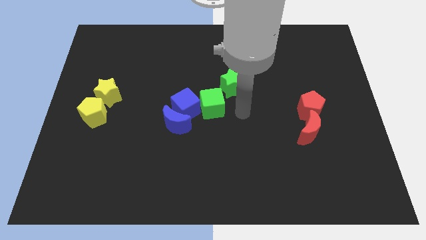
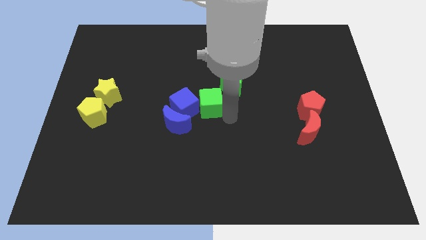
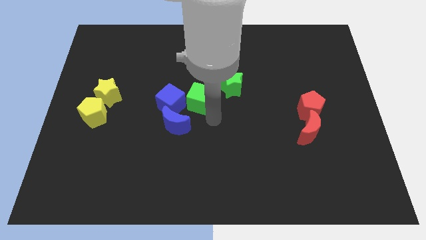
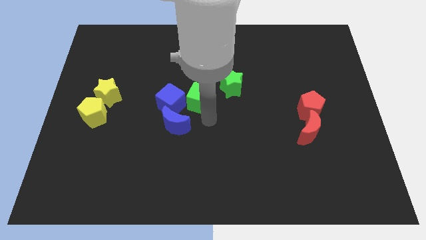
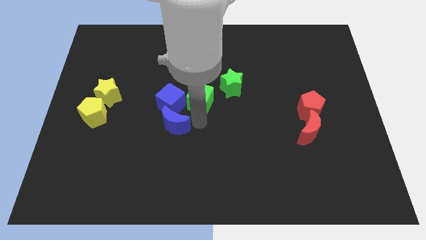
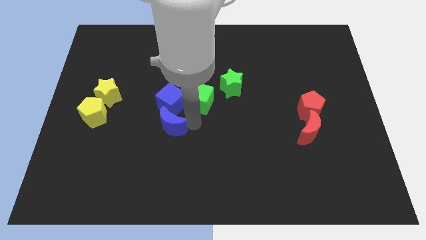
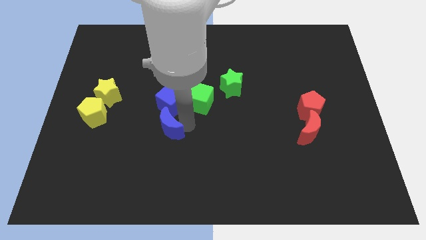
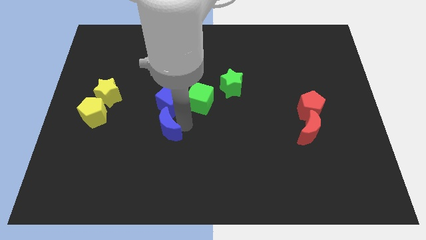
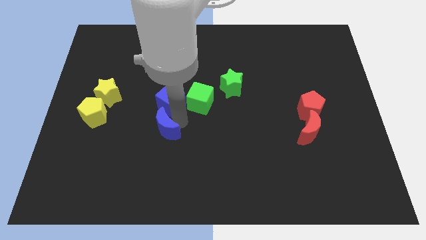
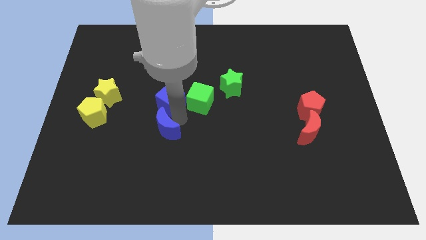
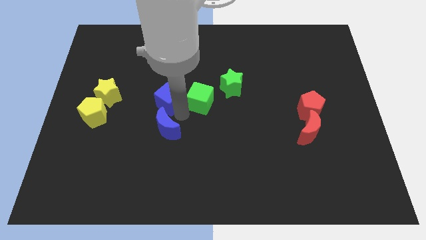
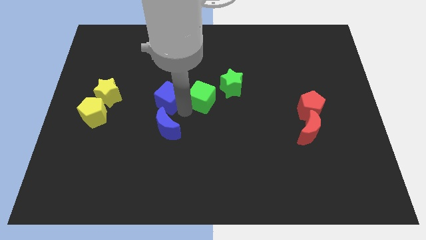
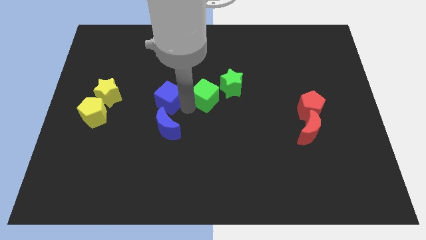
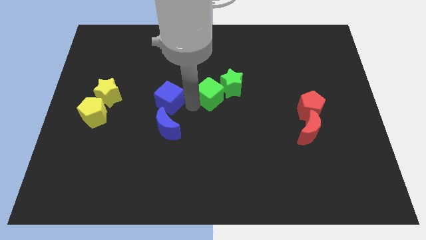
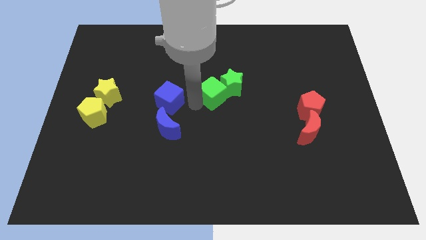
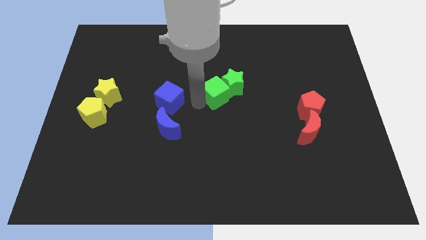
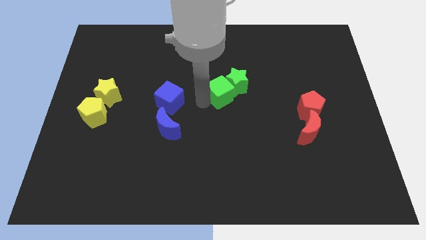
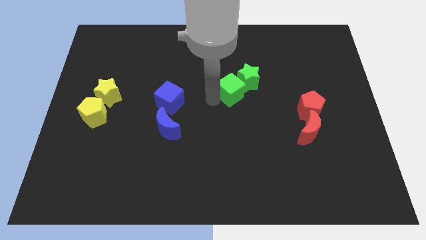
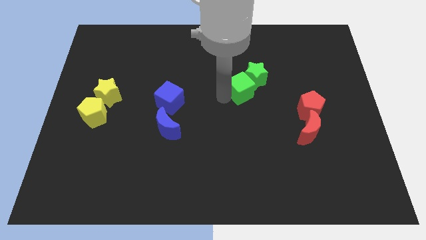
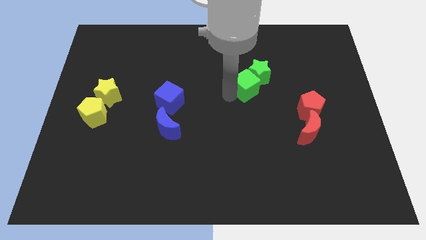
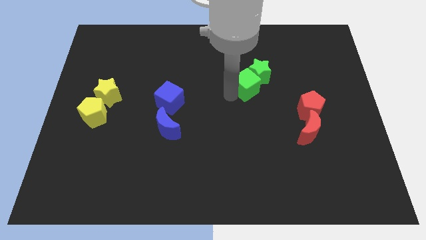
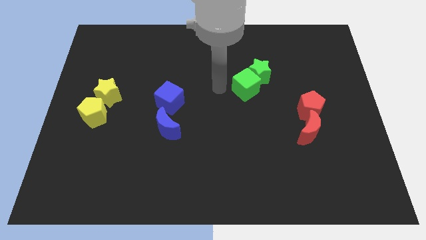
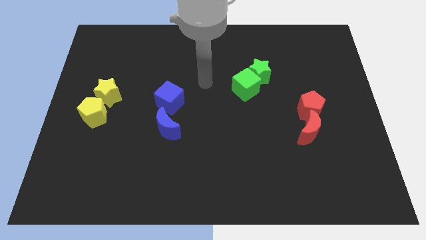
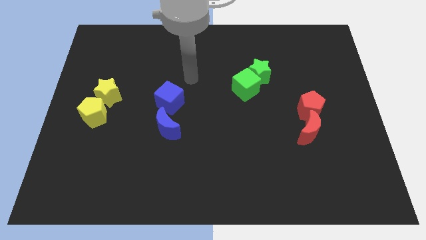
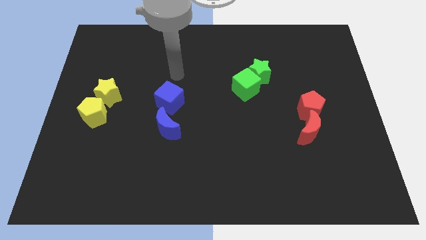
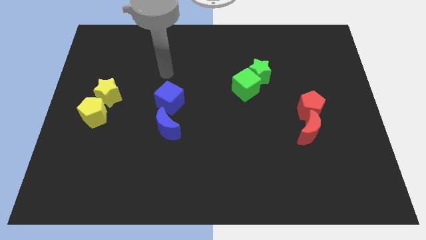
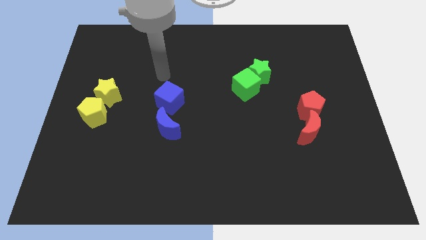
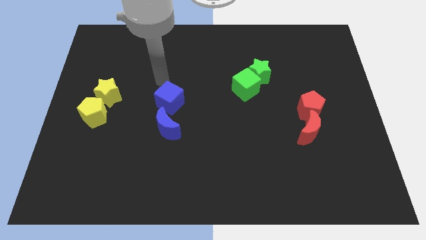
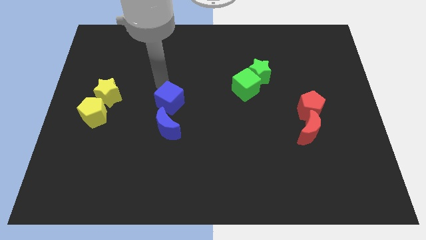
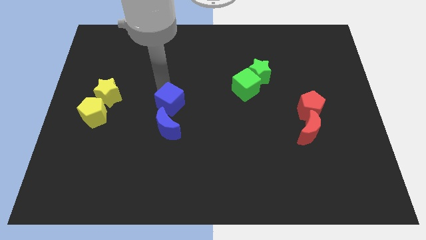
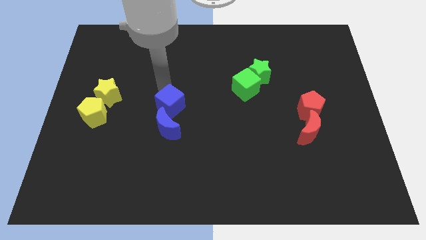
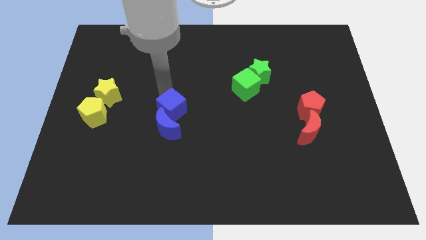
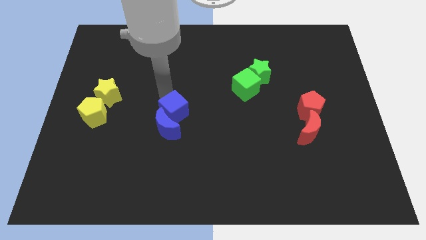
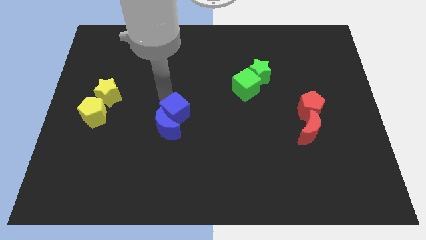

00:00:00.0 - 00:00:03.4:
separate the blue blocks from the green blocks

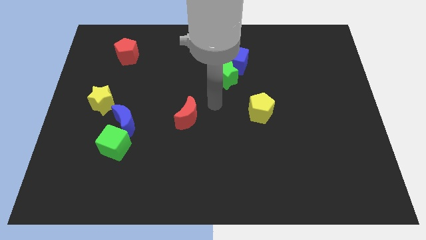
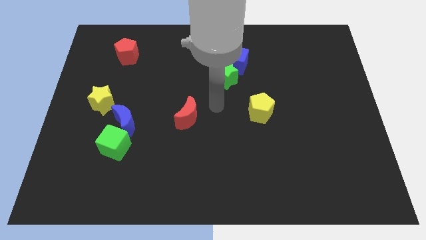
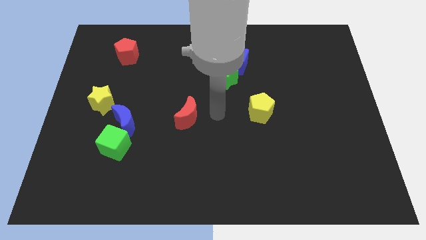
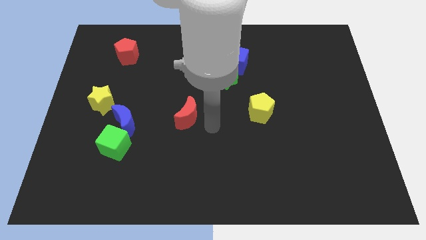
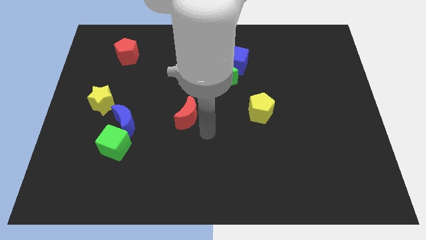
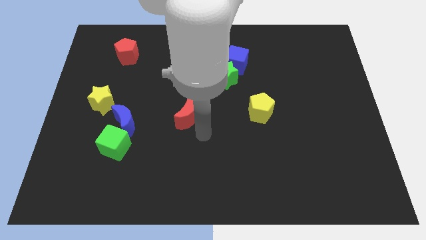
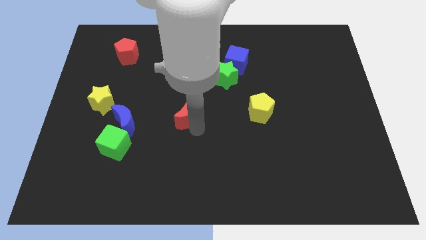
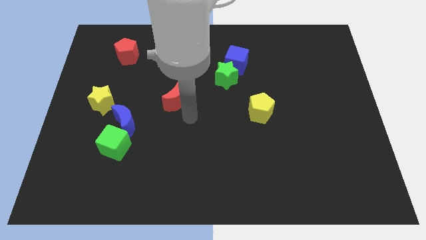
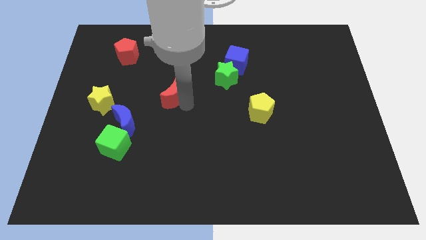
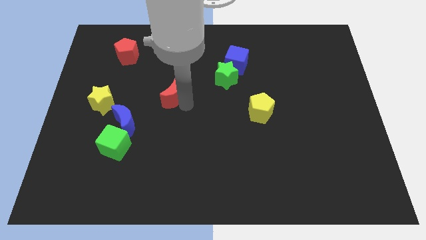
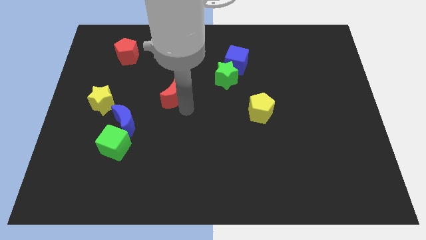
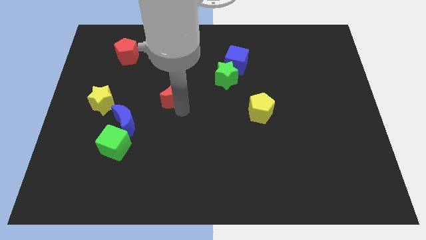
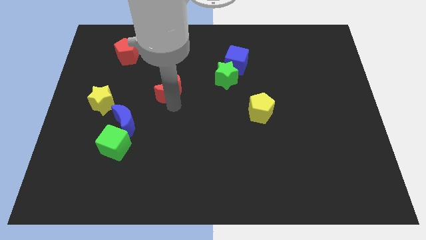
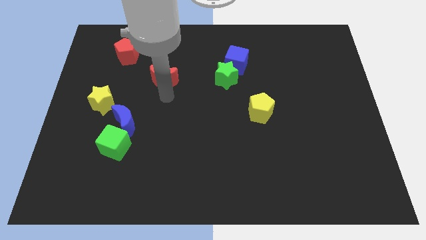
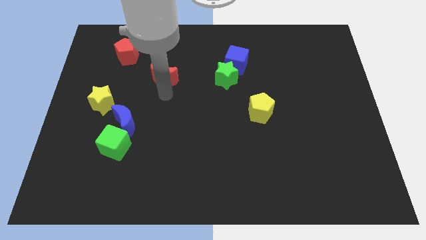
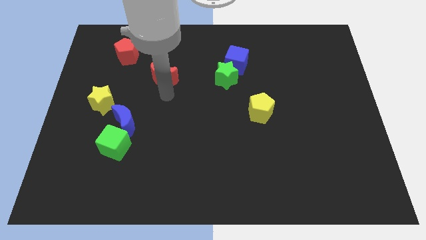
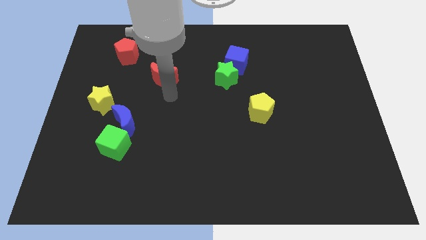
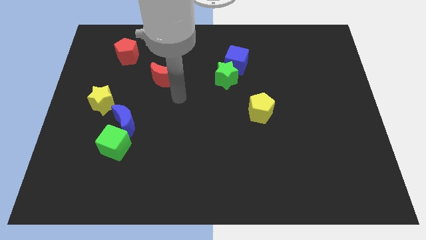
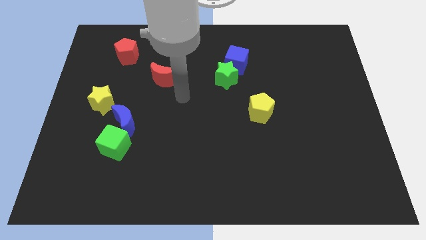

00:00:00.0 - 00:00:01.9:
move the red crescent to the top of the board

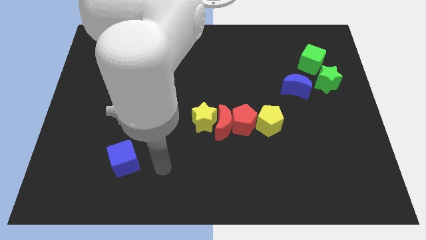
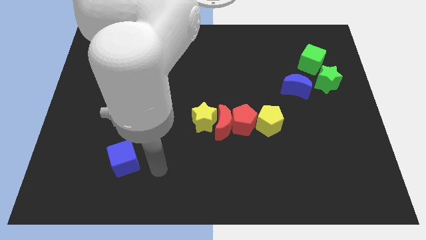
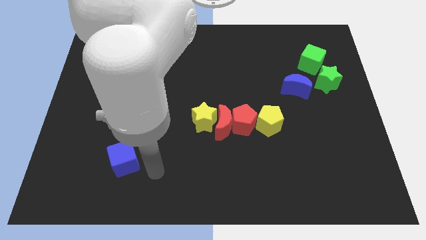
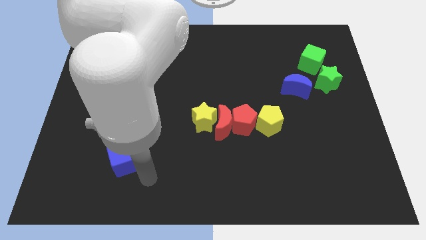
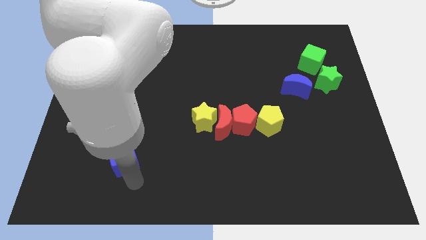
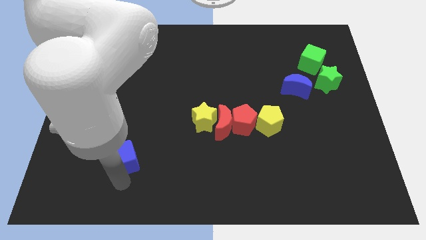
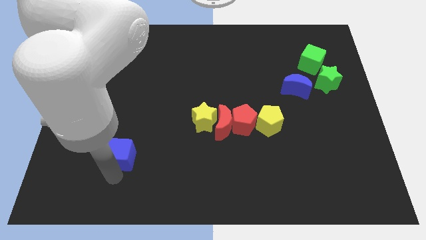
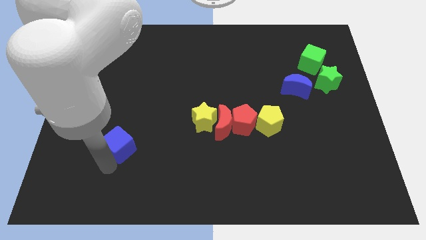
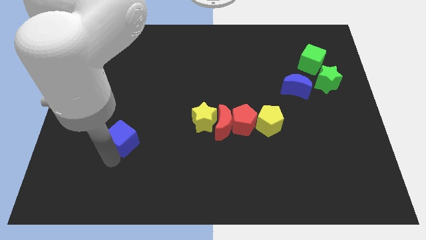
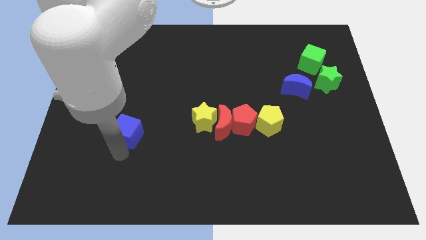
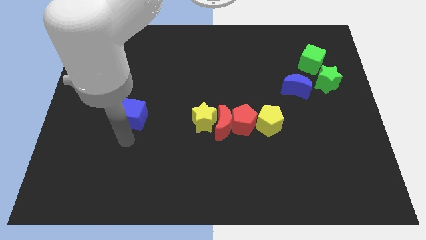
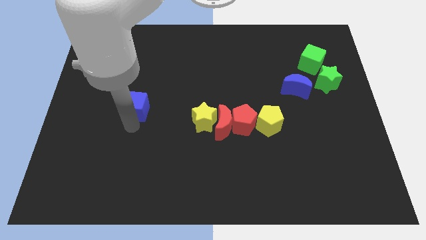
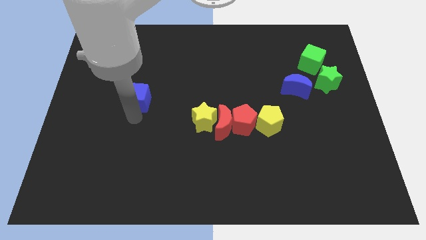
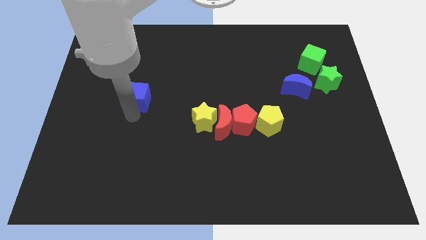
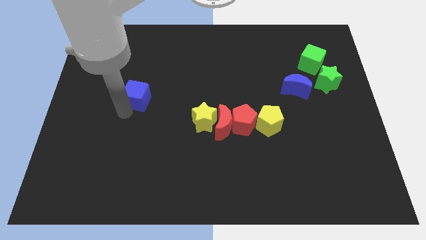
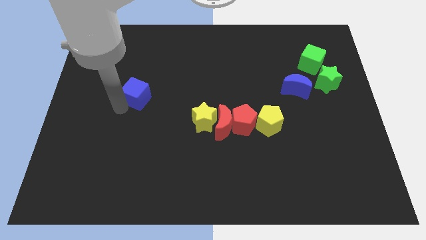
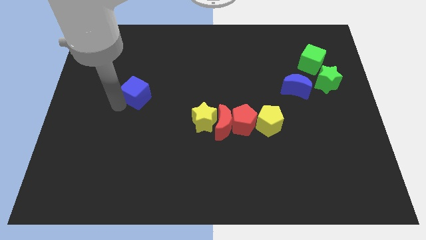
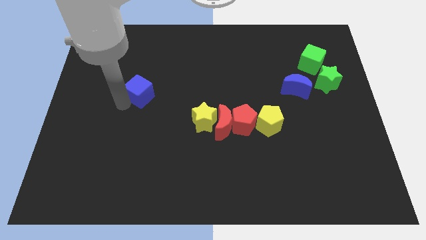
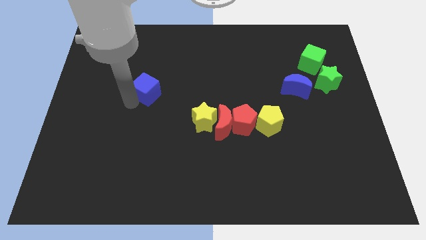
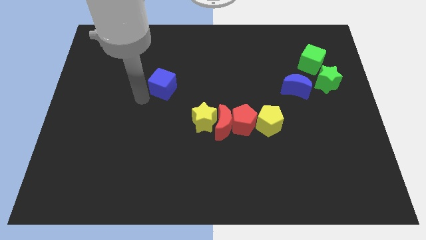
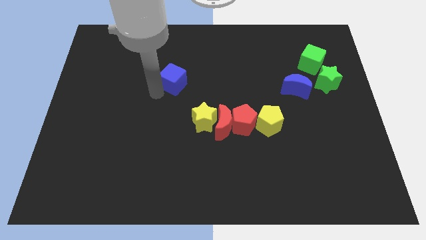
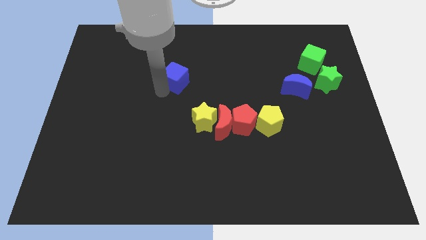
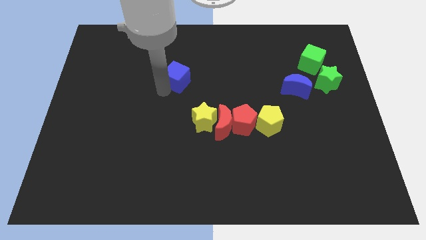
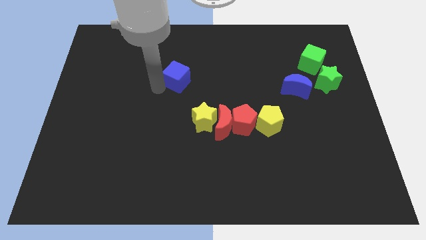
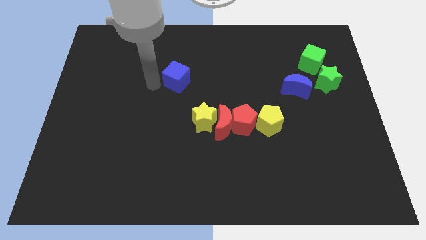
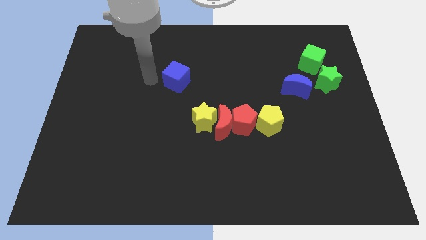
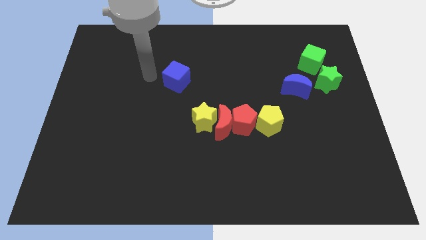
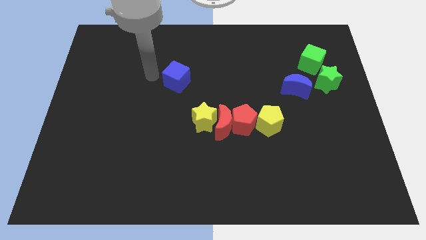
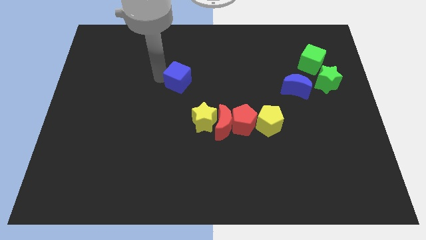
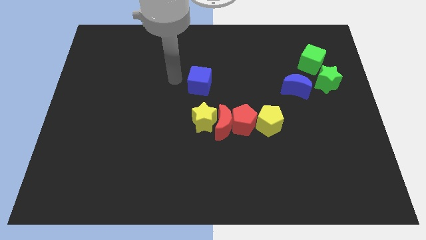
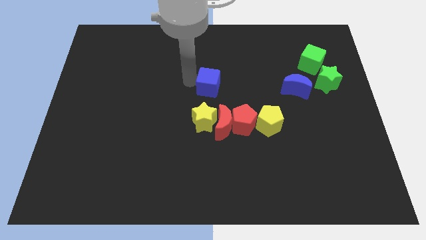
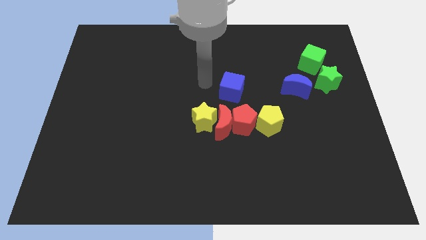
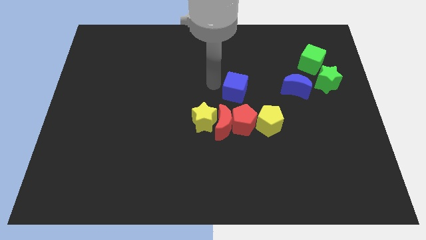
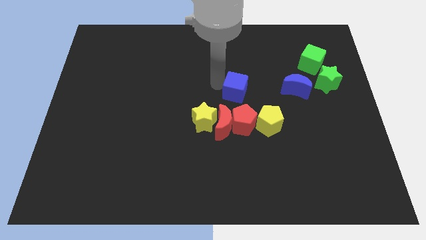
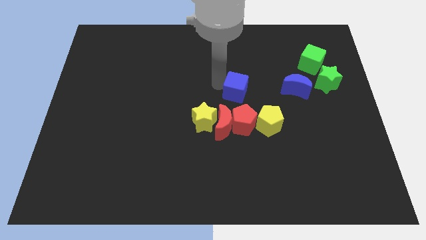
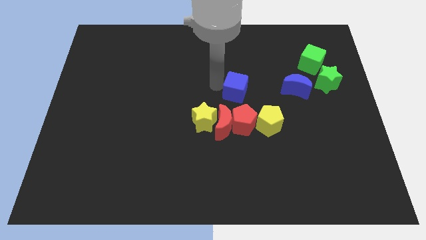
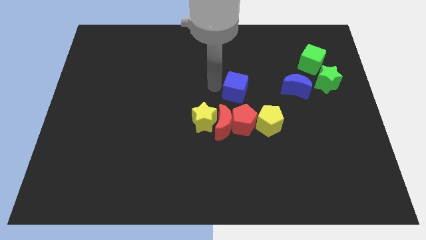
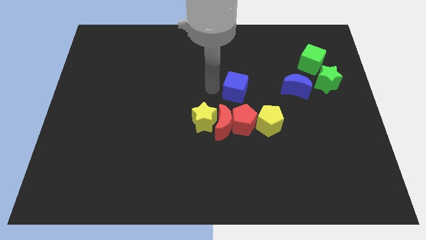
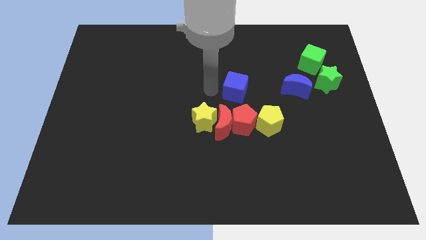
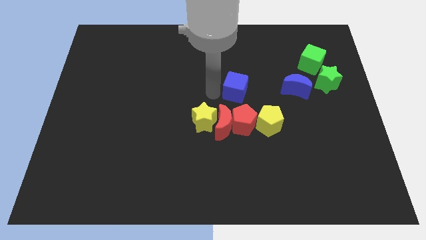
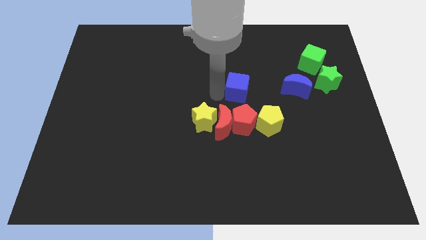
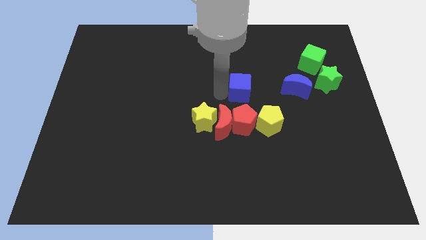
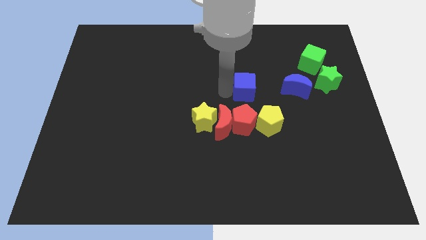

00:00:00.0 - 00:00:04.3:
slide the blue cube to the top side of the red pentagon
